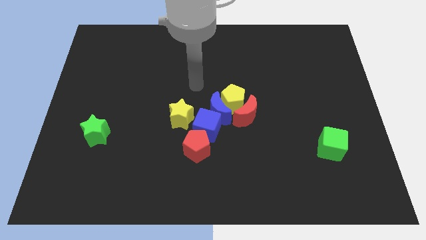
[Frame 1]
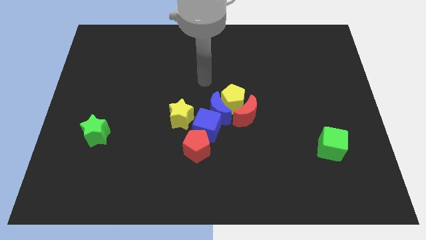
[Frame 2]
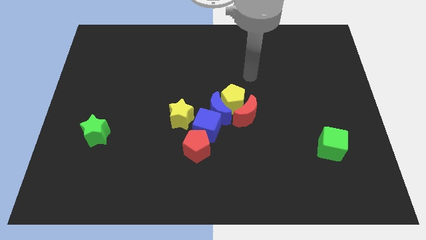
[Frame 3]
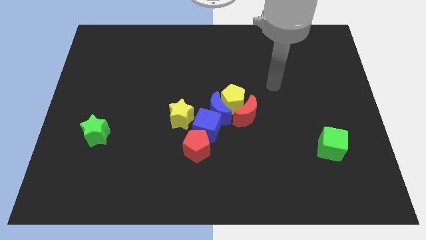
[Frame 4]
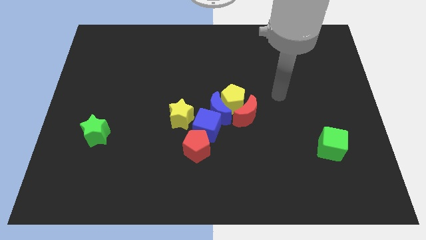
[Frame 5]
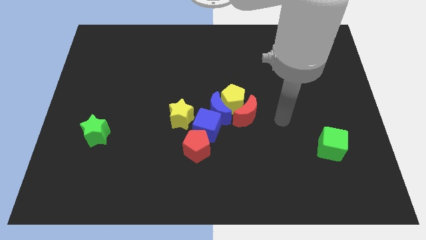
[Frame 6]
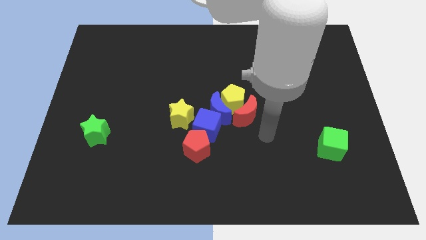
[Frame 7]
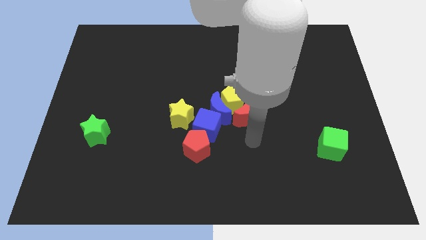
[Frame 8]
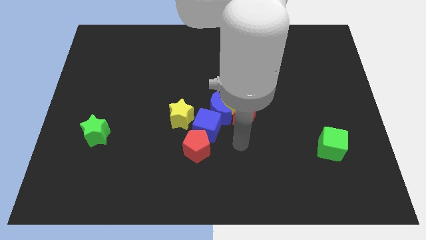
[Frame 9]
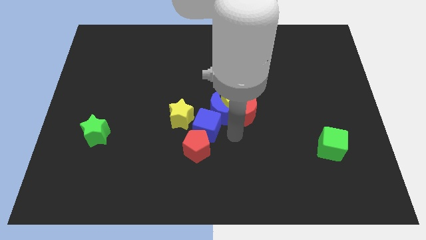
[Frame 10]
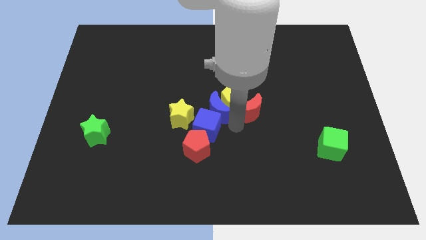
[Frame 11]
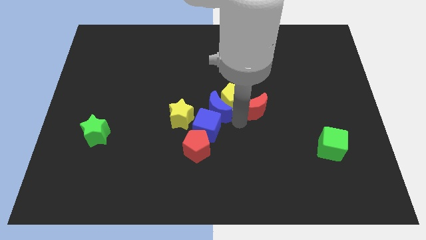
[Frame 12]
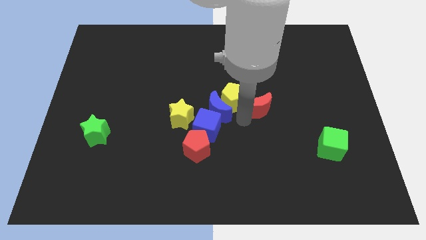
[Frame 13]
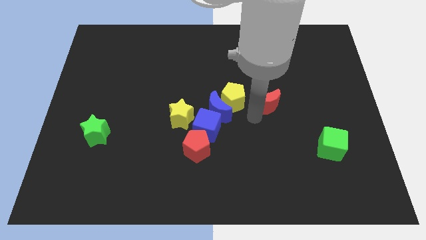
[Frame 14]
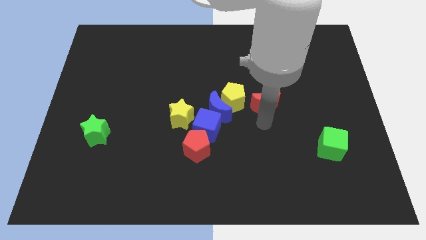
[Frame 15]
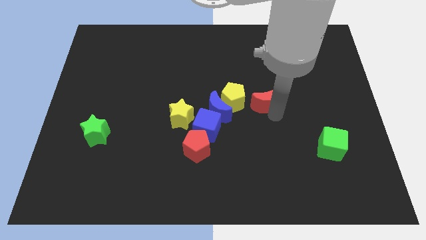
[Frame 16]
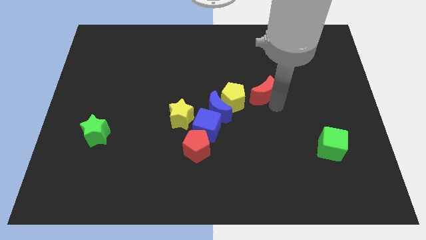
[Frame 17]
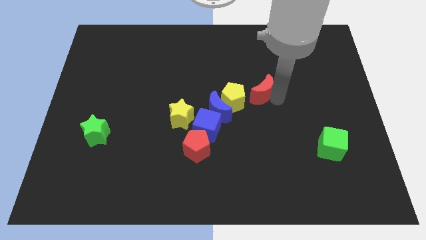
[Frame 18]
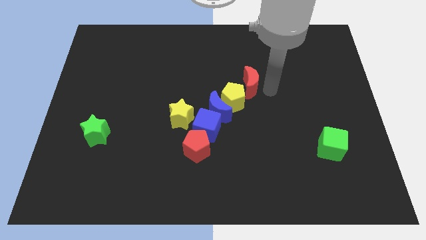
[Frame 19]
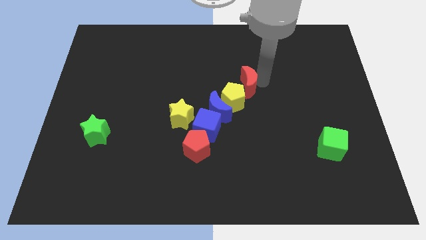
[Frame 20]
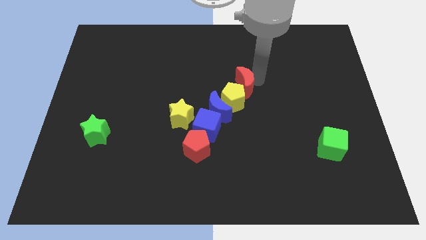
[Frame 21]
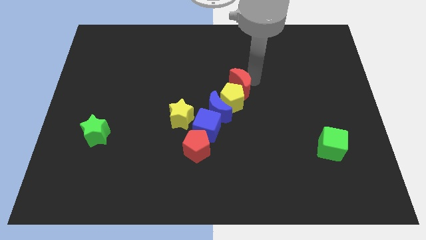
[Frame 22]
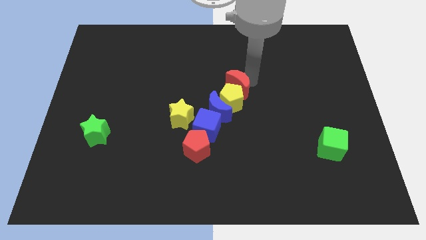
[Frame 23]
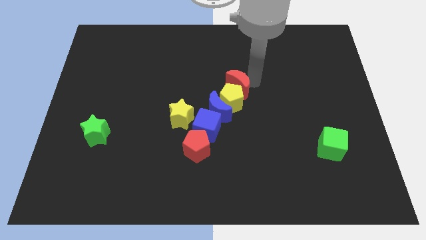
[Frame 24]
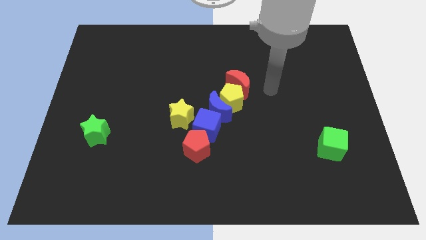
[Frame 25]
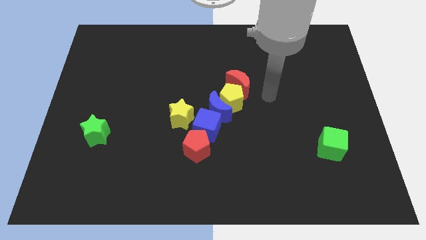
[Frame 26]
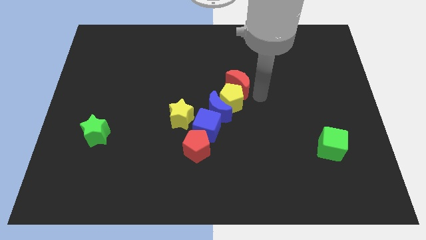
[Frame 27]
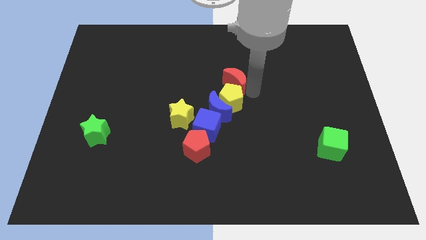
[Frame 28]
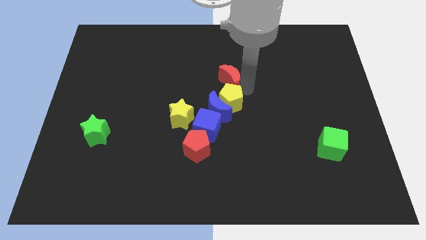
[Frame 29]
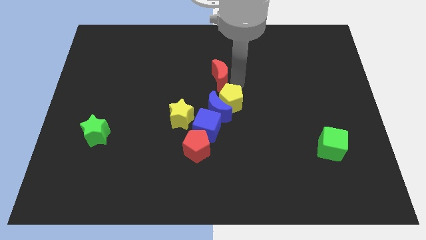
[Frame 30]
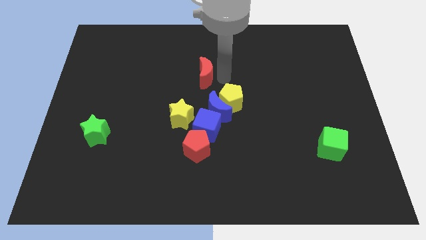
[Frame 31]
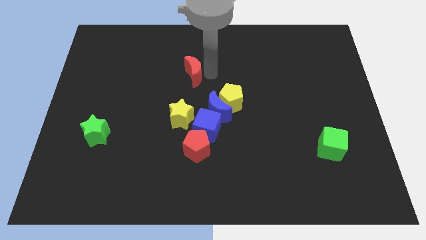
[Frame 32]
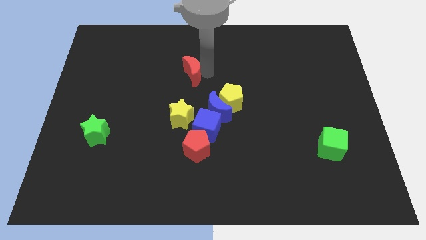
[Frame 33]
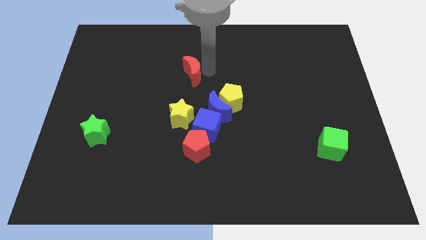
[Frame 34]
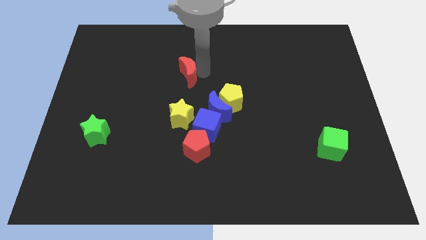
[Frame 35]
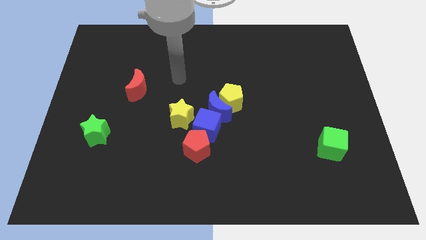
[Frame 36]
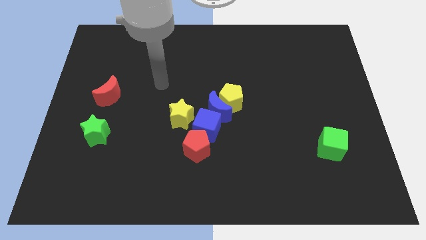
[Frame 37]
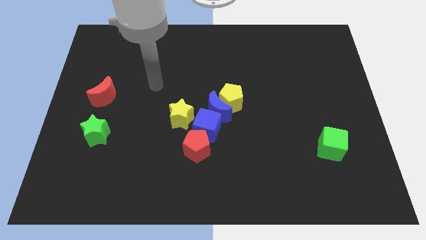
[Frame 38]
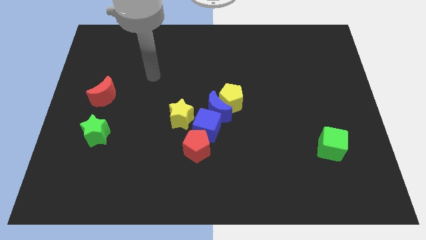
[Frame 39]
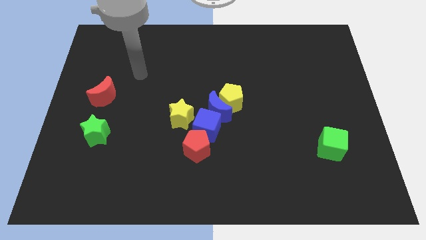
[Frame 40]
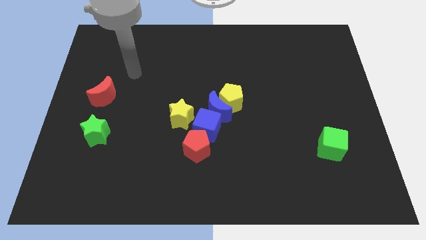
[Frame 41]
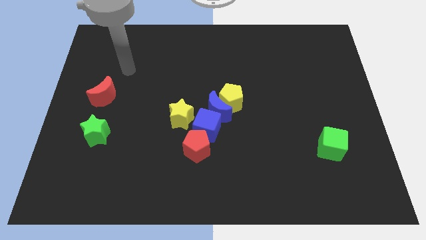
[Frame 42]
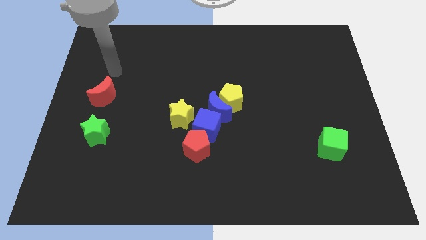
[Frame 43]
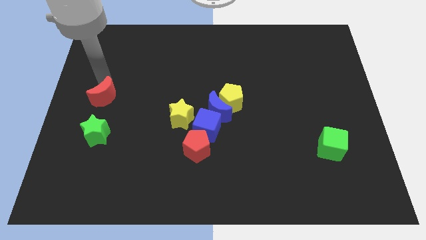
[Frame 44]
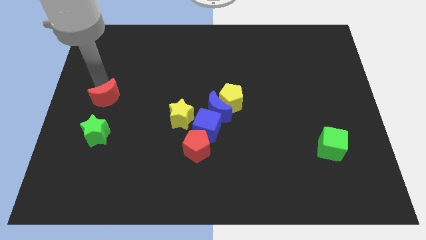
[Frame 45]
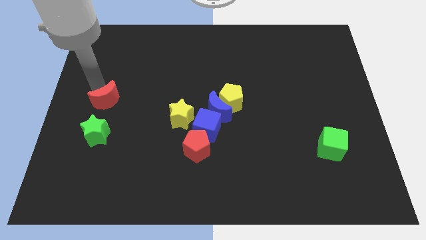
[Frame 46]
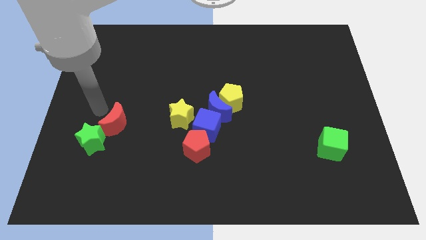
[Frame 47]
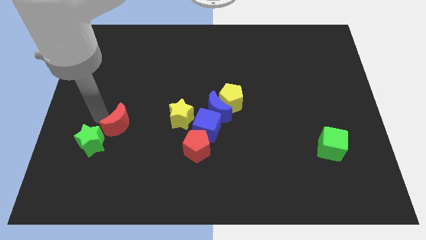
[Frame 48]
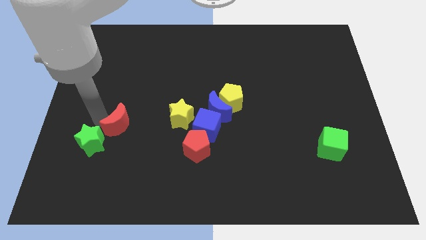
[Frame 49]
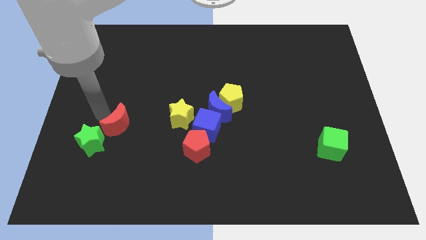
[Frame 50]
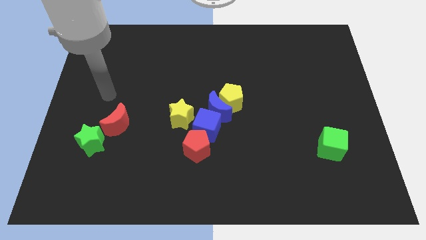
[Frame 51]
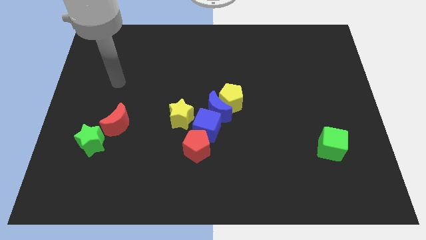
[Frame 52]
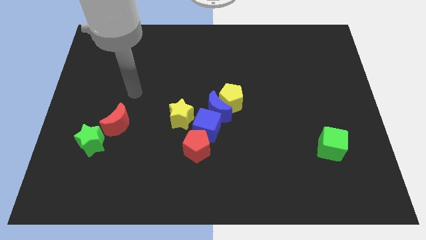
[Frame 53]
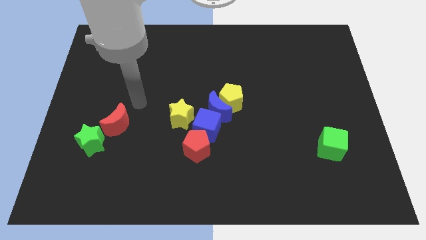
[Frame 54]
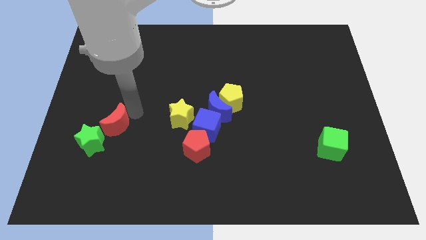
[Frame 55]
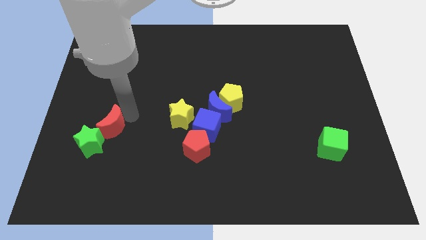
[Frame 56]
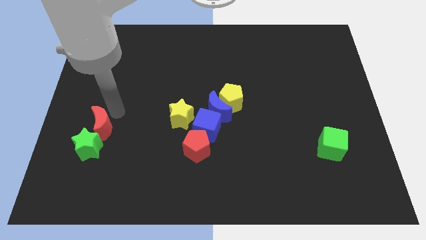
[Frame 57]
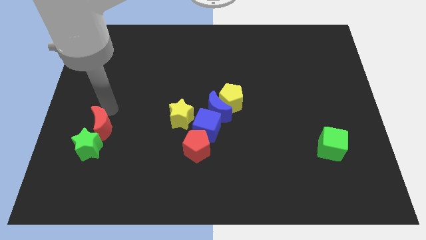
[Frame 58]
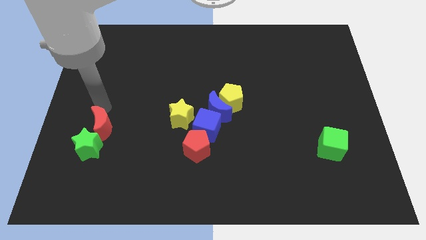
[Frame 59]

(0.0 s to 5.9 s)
put the red moon to the green star

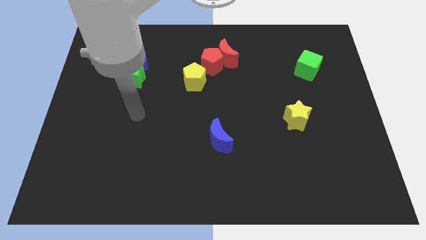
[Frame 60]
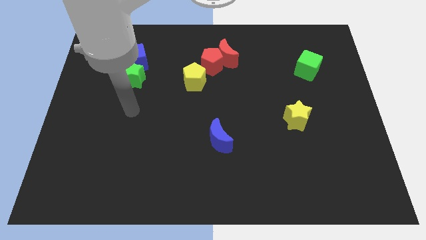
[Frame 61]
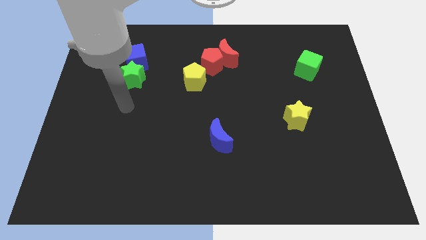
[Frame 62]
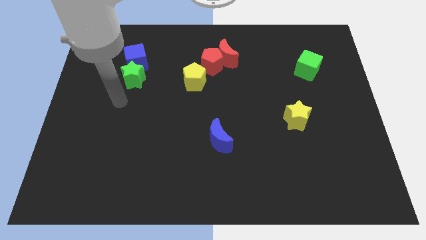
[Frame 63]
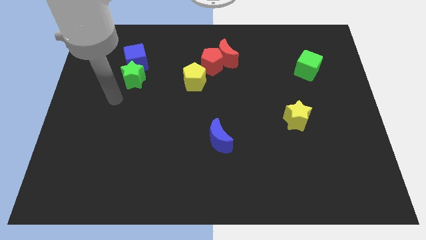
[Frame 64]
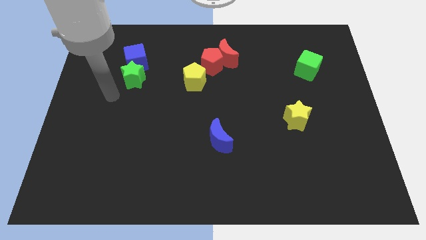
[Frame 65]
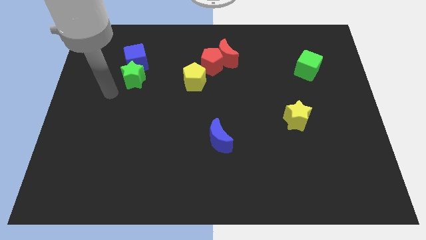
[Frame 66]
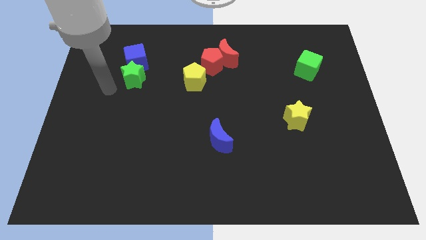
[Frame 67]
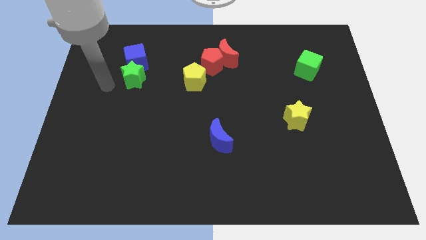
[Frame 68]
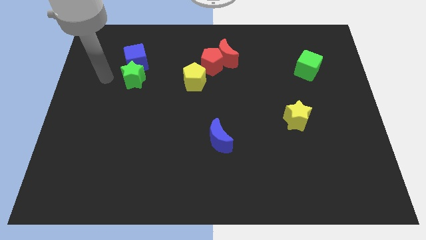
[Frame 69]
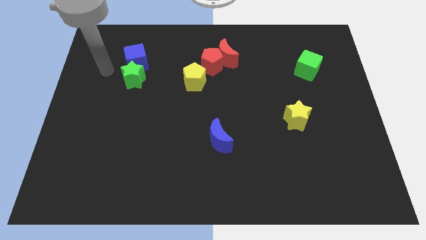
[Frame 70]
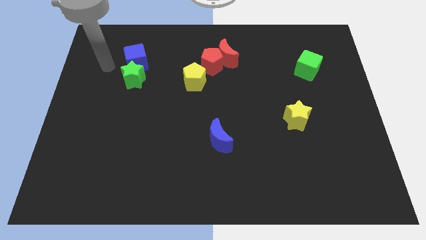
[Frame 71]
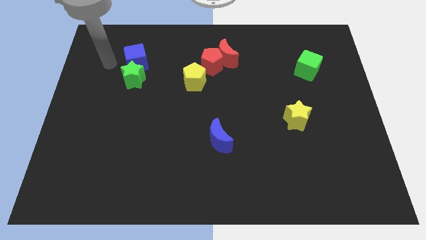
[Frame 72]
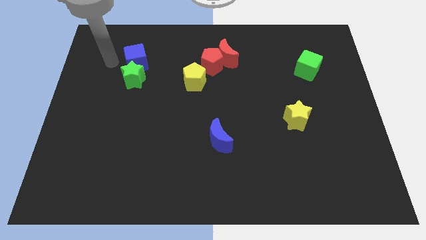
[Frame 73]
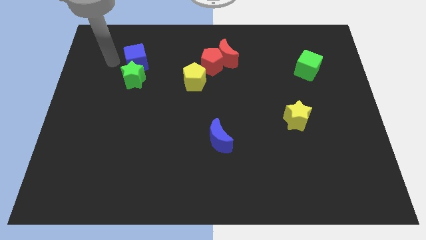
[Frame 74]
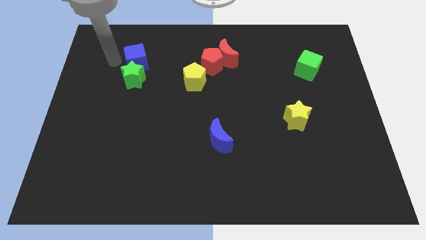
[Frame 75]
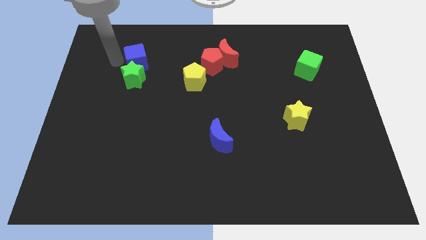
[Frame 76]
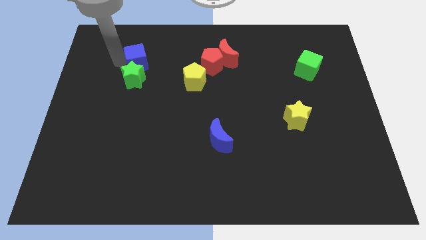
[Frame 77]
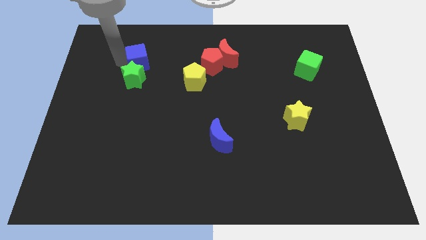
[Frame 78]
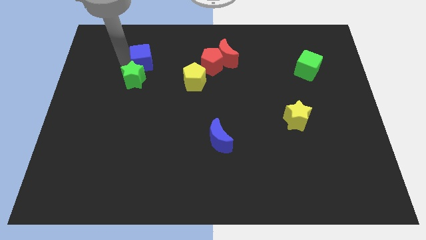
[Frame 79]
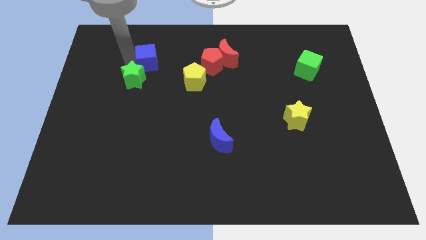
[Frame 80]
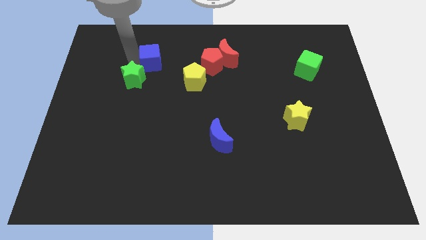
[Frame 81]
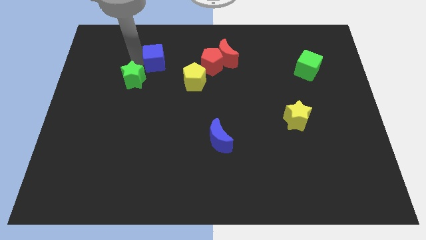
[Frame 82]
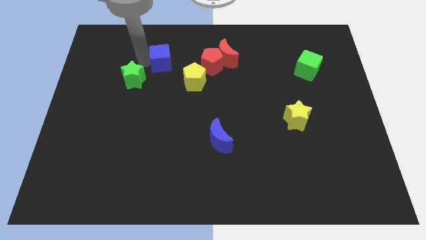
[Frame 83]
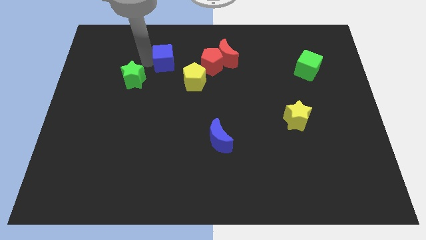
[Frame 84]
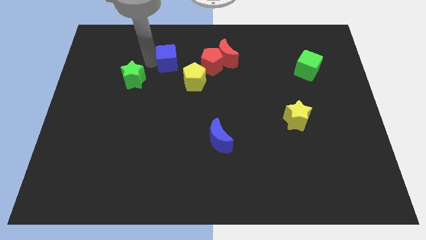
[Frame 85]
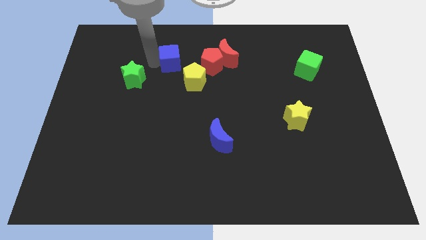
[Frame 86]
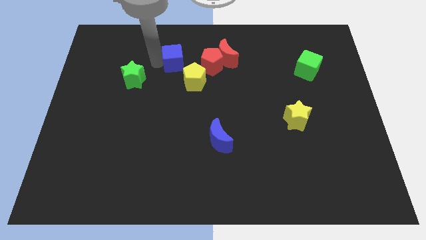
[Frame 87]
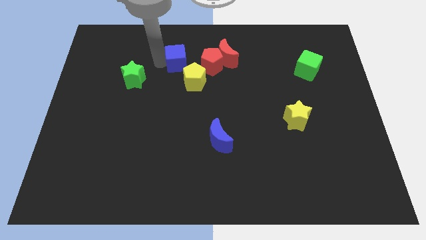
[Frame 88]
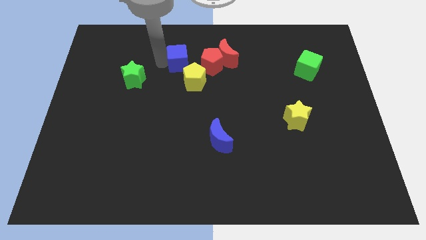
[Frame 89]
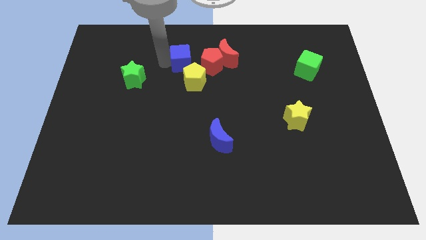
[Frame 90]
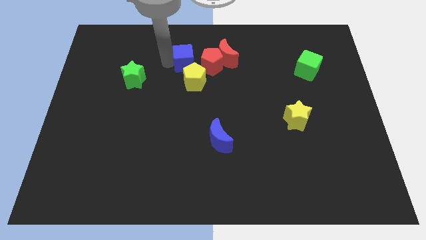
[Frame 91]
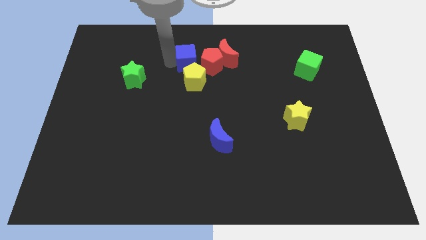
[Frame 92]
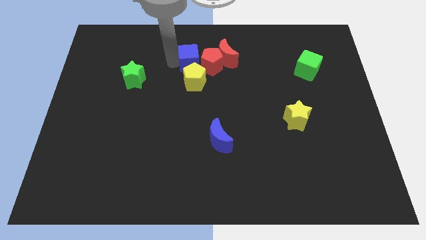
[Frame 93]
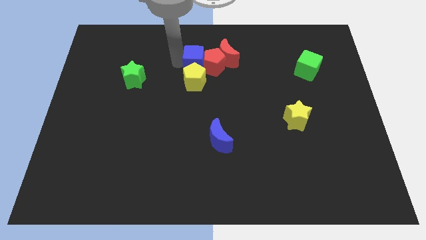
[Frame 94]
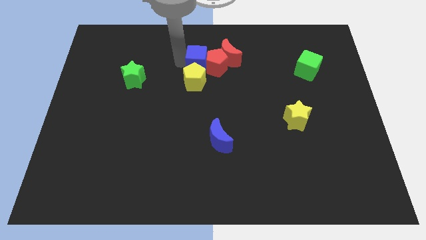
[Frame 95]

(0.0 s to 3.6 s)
push the blue cube next to the red pentagon
